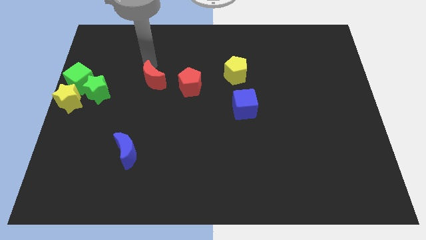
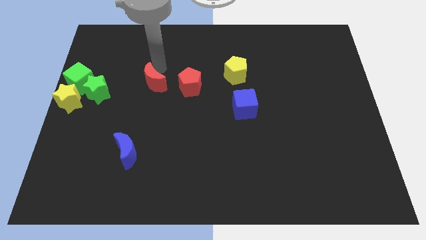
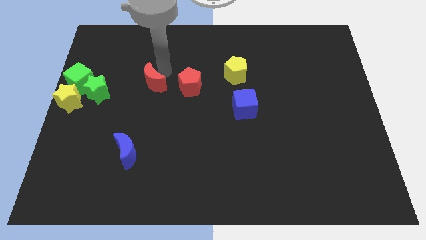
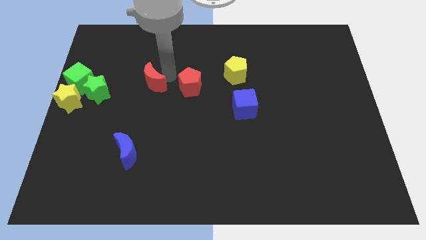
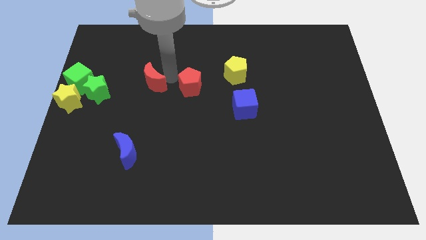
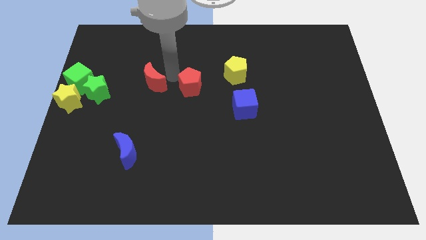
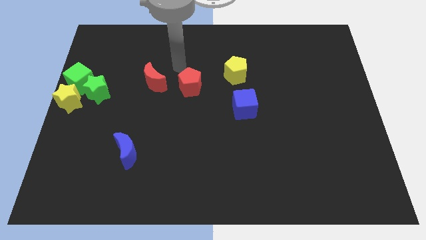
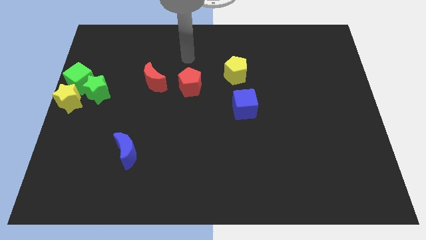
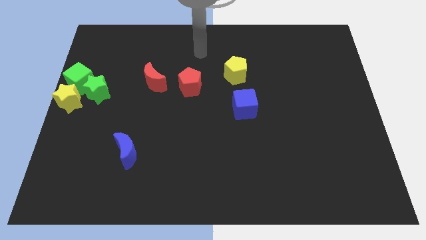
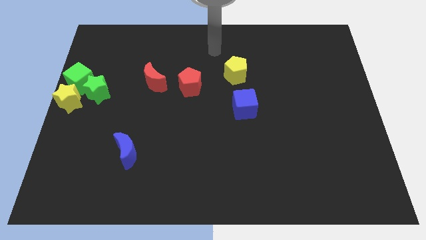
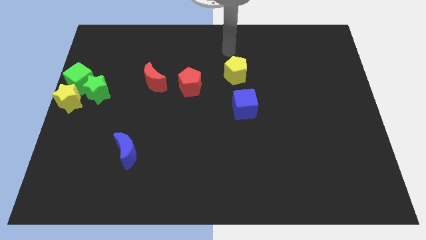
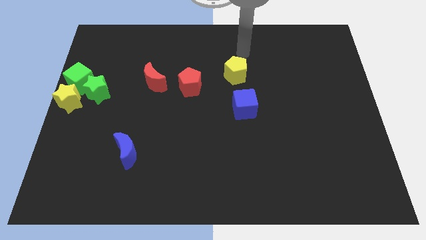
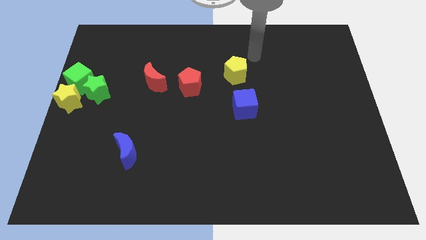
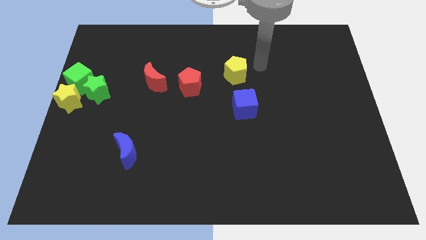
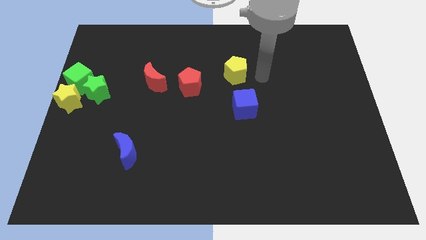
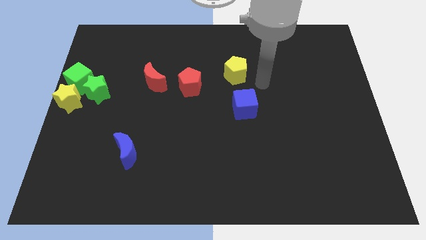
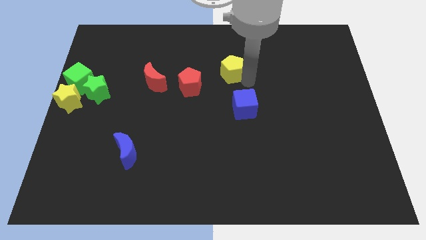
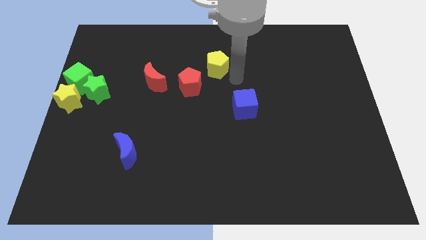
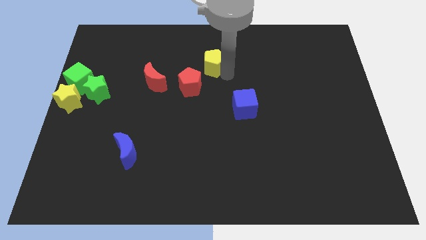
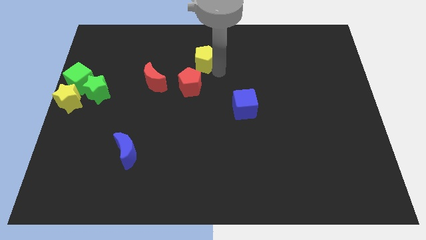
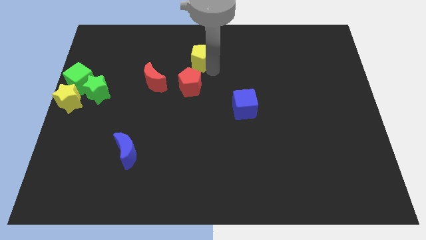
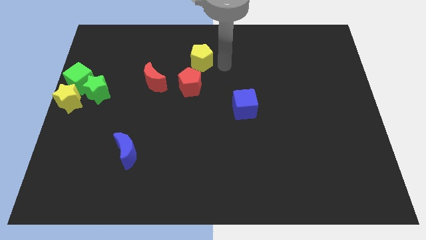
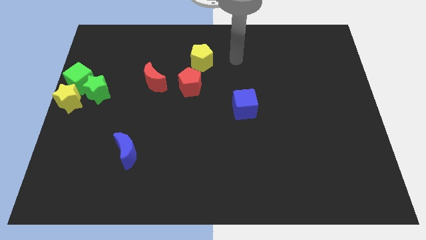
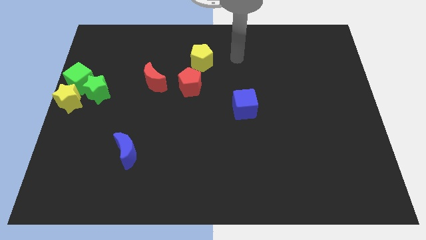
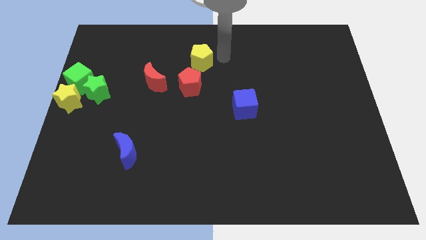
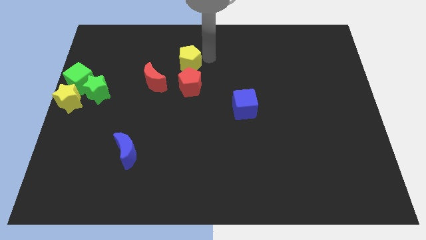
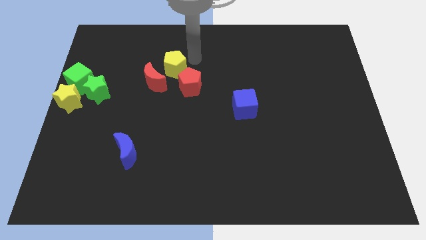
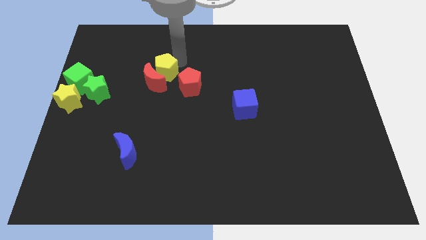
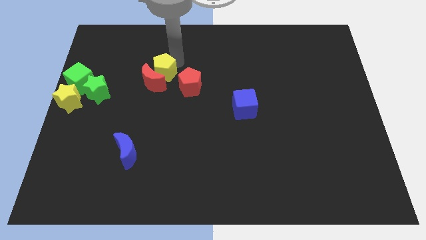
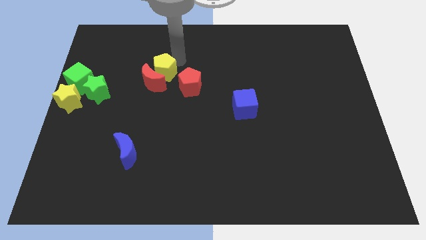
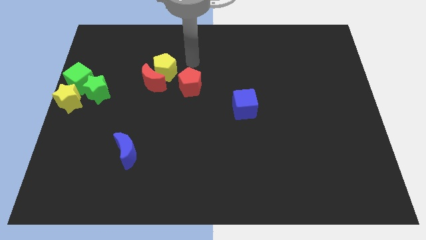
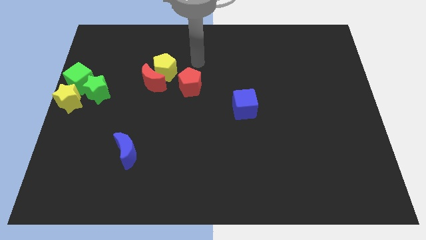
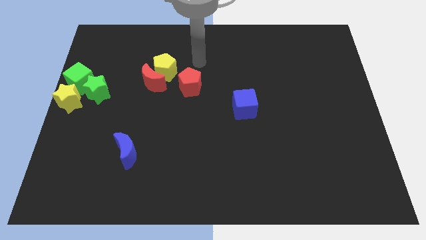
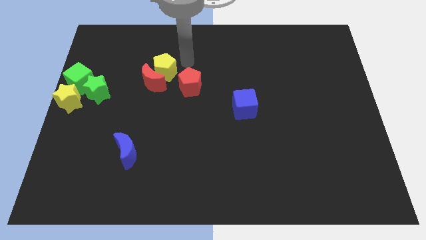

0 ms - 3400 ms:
place the yellow pentagon close to the red moon

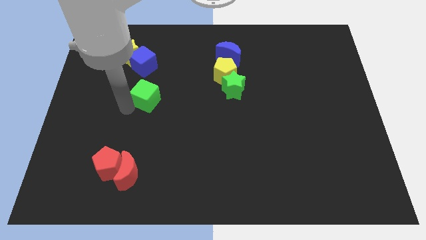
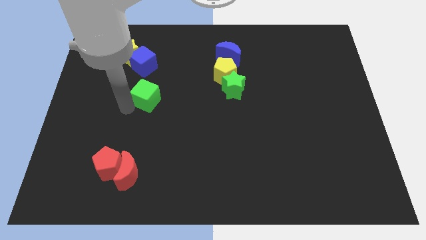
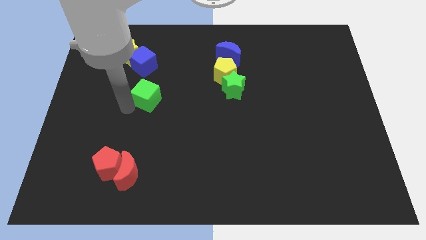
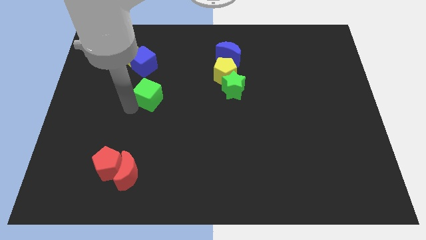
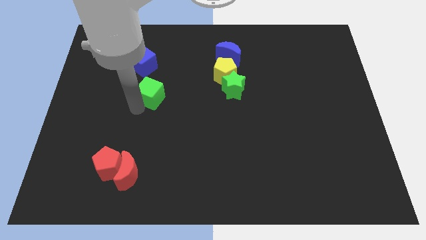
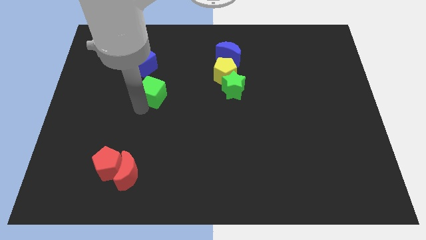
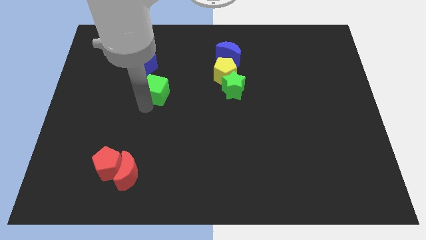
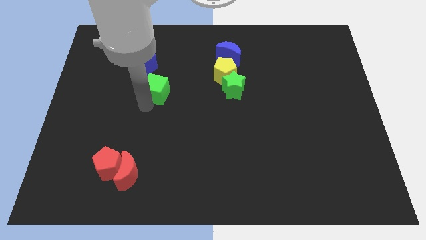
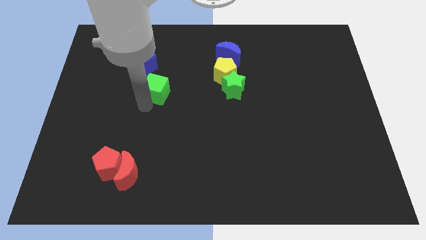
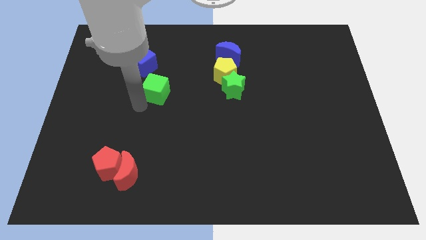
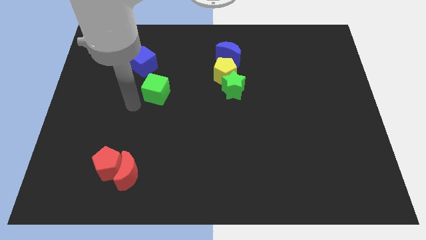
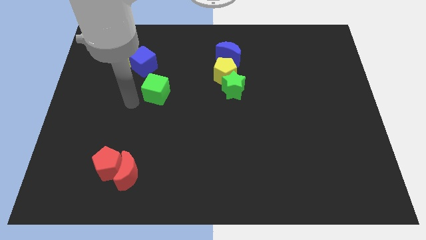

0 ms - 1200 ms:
place the green cube parallel to green star

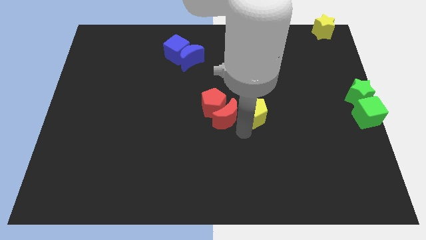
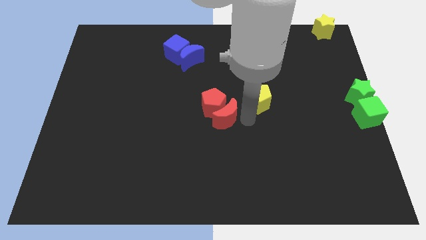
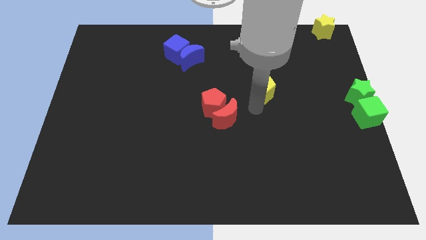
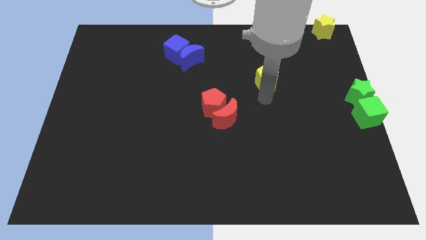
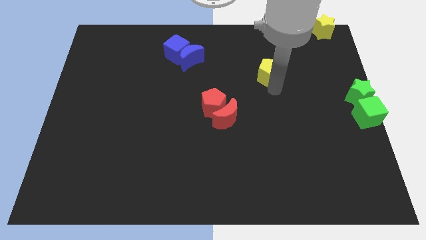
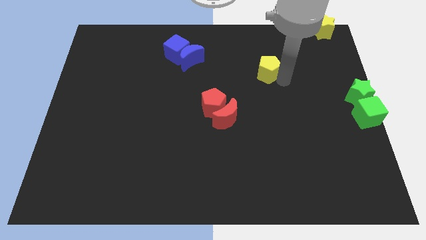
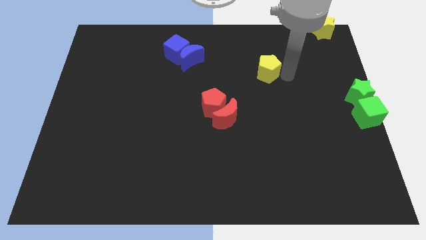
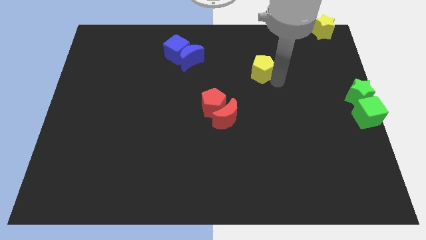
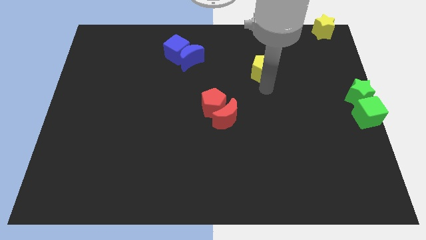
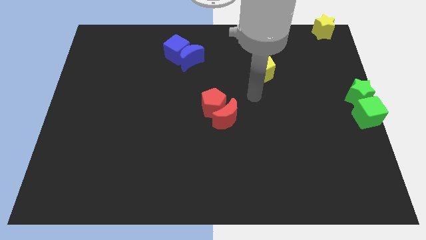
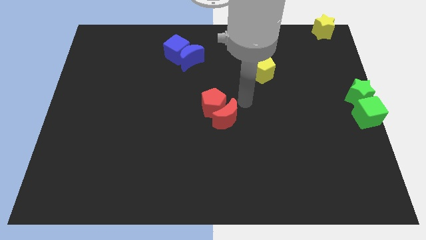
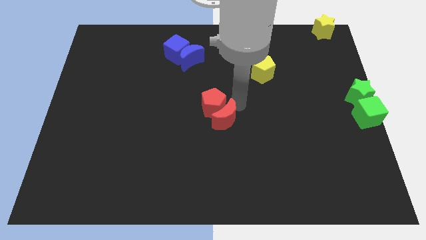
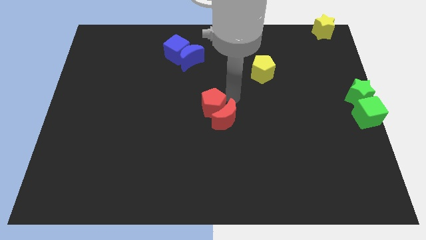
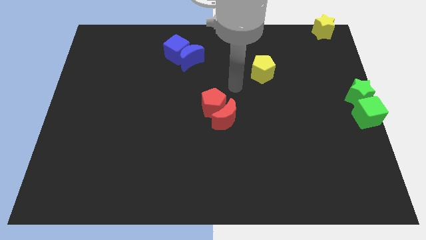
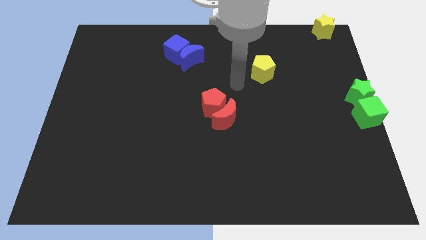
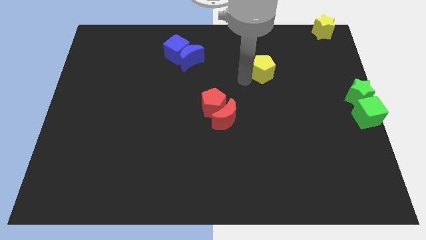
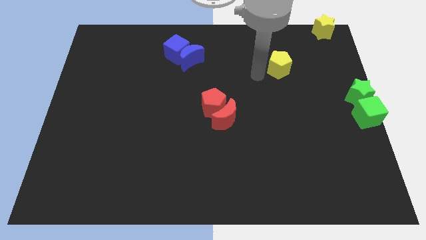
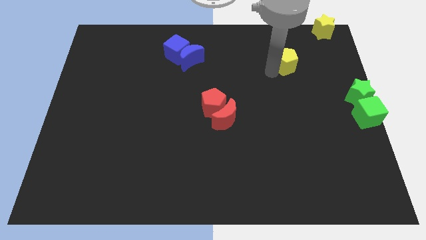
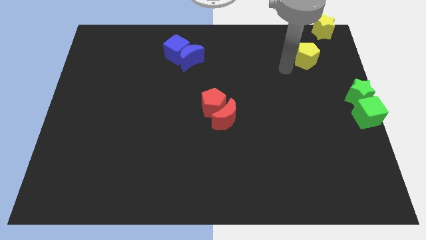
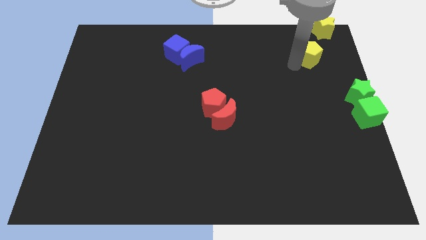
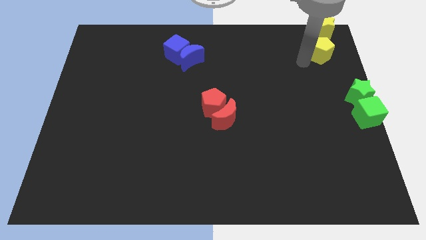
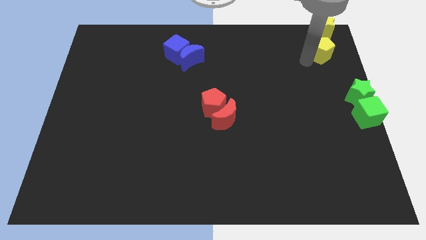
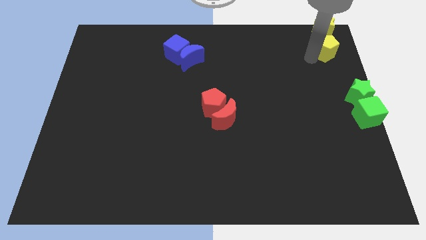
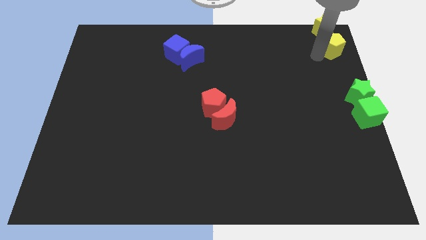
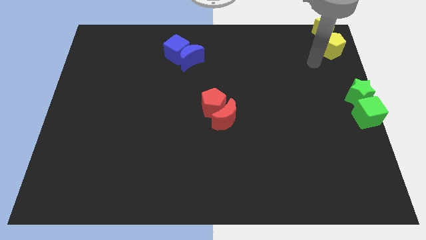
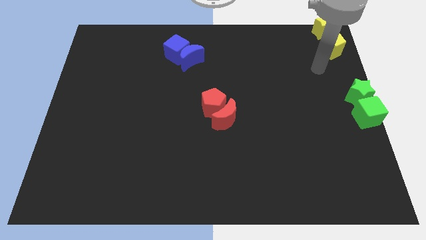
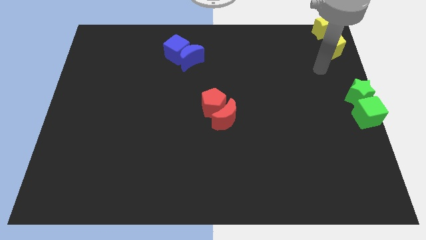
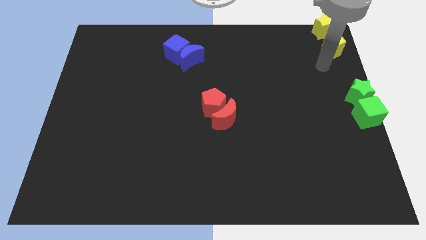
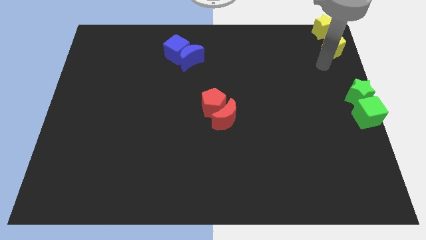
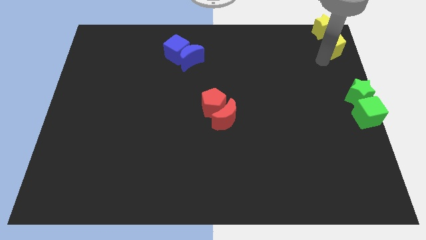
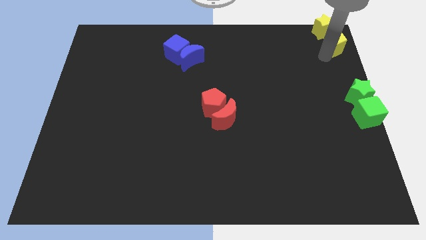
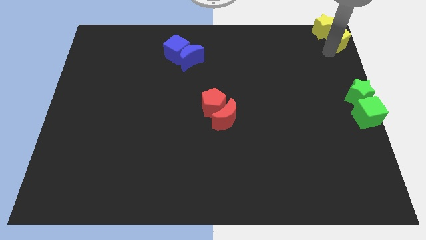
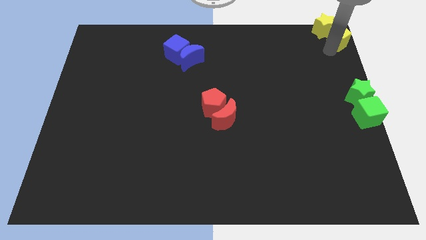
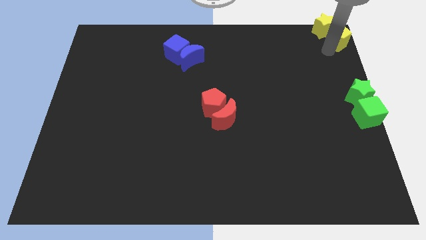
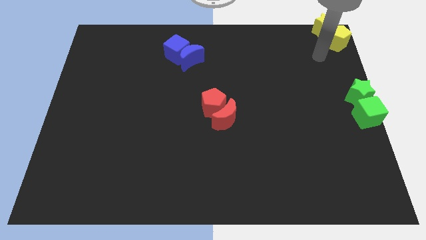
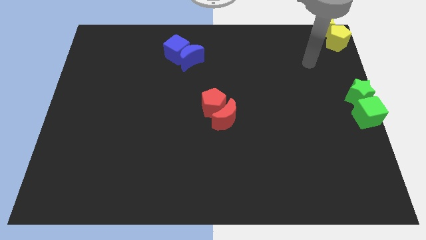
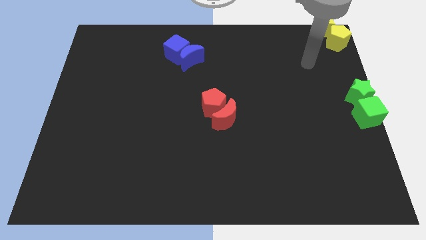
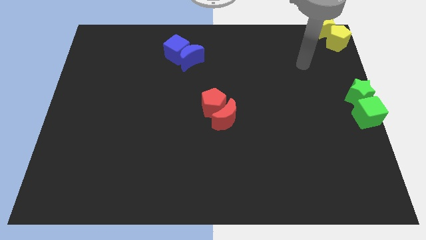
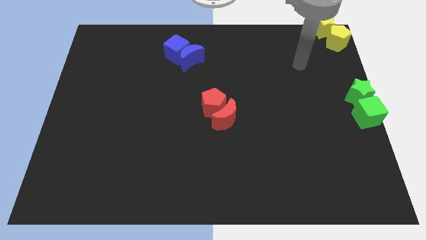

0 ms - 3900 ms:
push the yellow pentagon into the yellow star

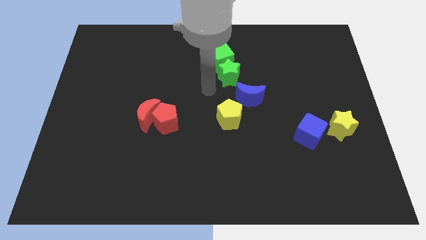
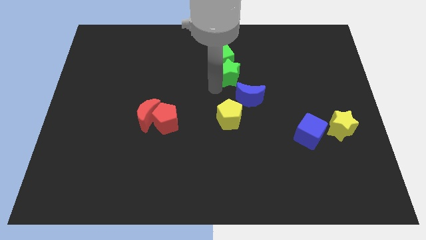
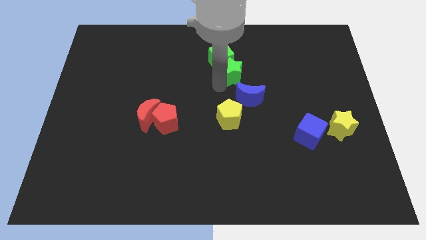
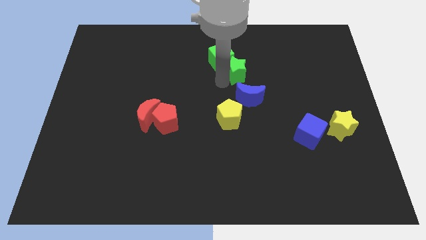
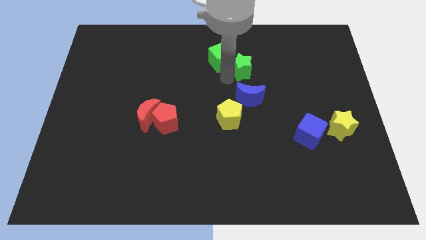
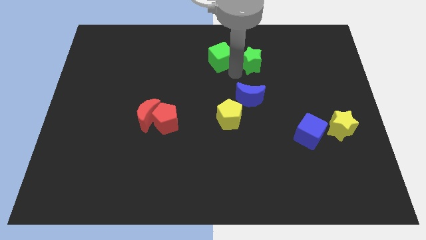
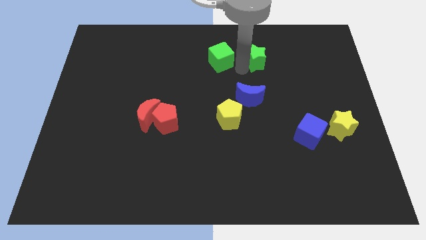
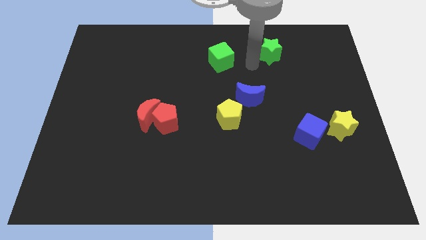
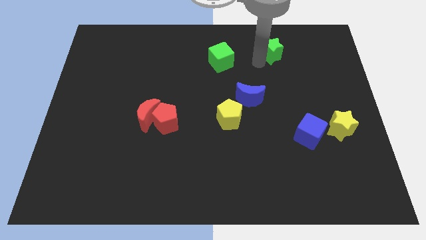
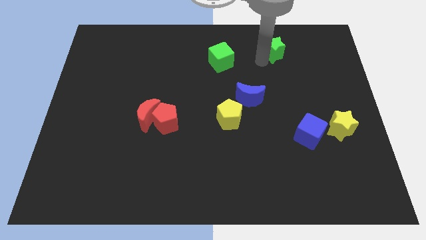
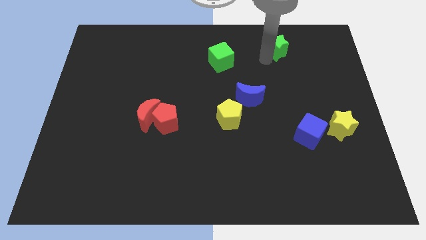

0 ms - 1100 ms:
place the green star above the blue moon
